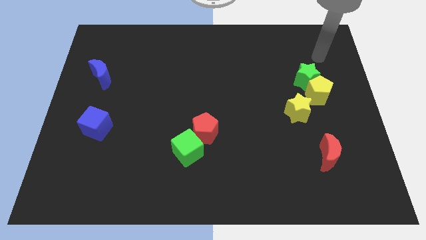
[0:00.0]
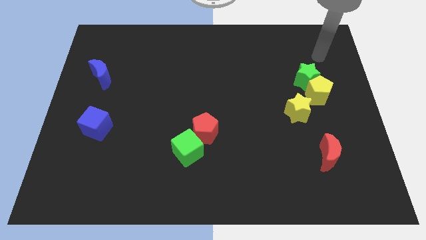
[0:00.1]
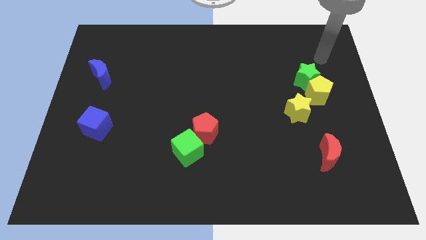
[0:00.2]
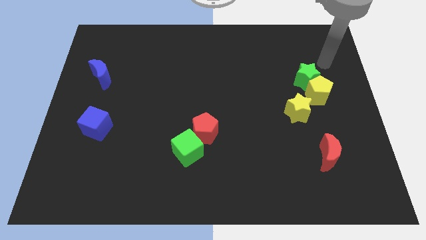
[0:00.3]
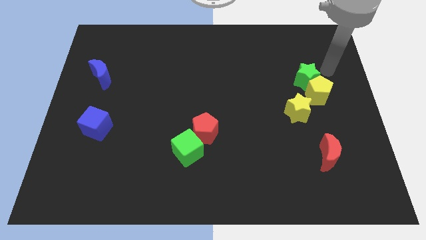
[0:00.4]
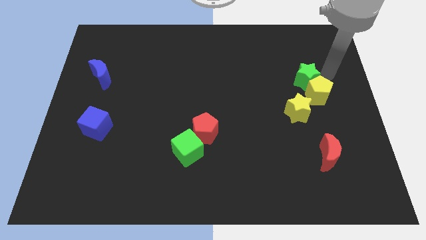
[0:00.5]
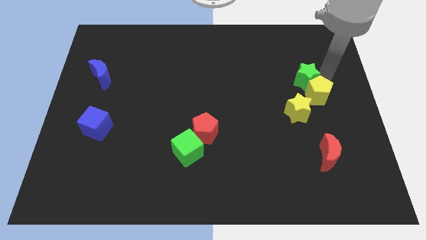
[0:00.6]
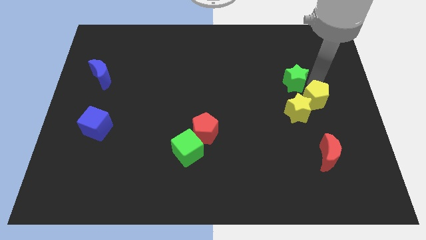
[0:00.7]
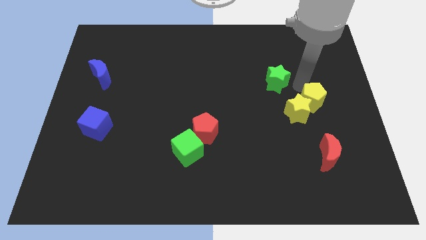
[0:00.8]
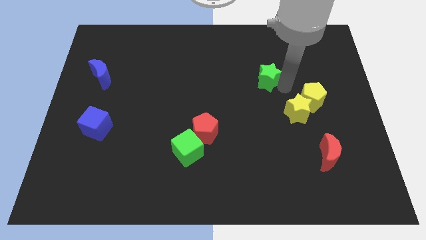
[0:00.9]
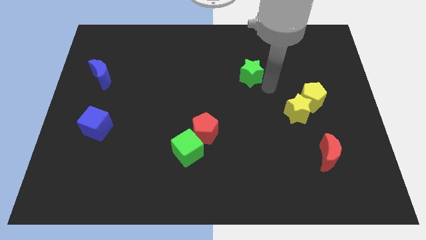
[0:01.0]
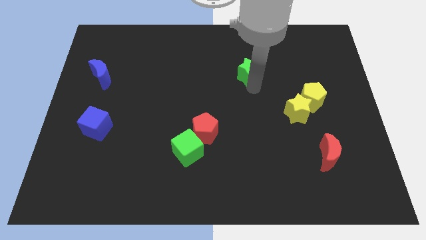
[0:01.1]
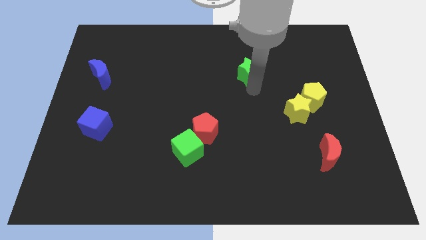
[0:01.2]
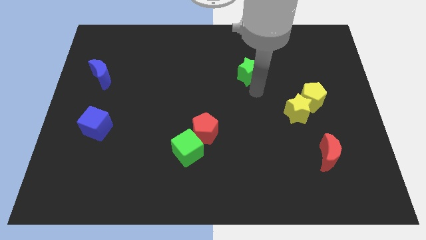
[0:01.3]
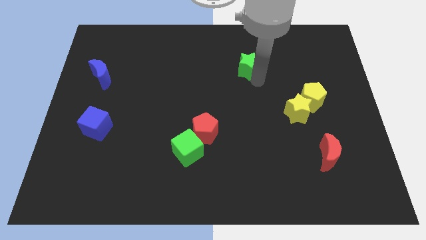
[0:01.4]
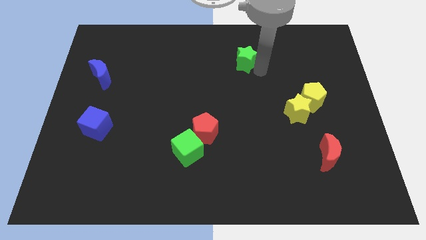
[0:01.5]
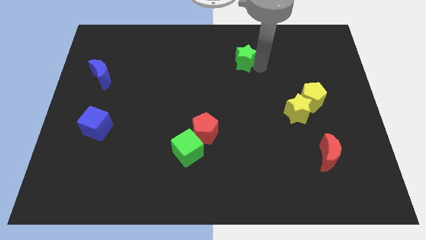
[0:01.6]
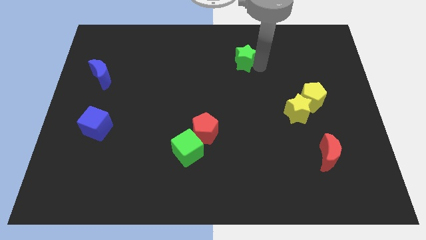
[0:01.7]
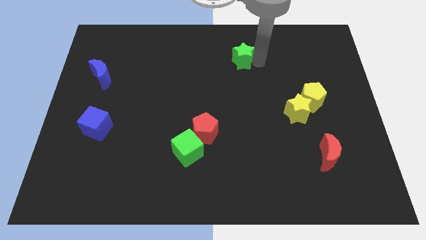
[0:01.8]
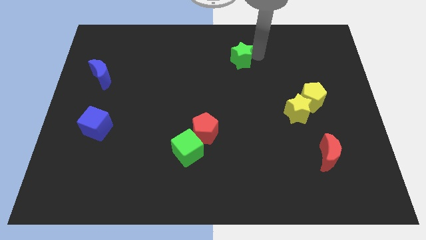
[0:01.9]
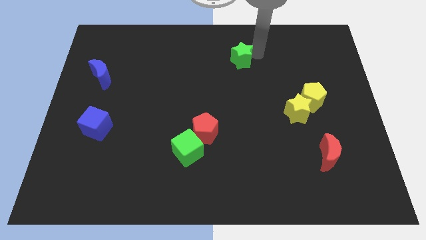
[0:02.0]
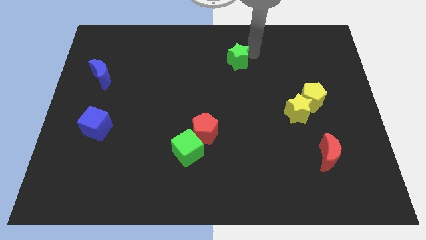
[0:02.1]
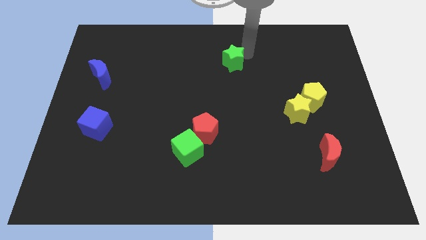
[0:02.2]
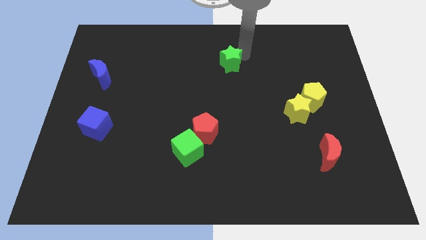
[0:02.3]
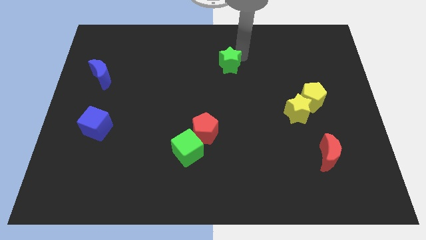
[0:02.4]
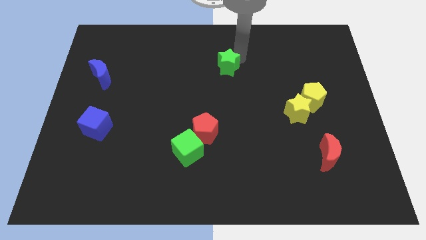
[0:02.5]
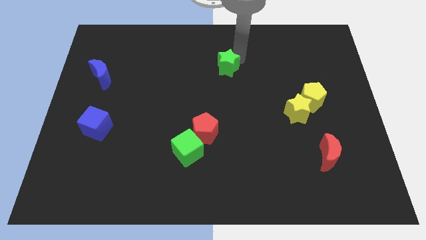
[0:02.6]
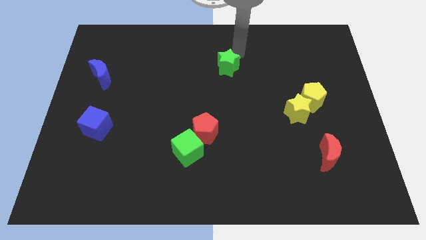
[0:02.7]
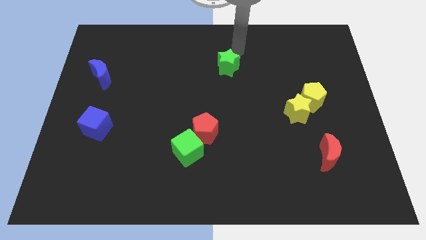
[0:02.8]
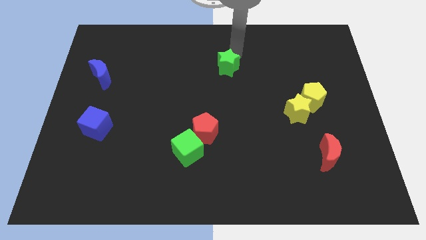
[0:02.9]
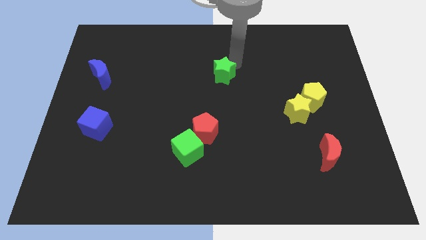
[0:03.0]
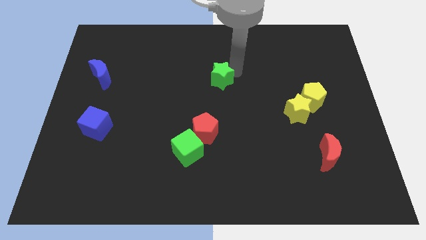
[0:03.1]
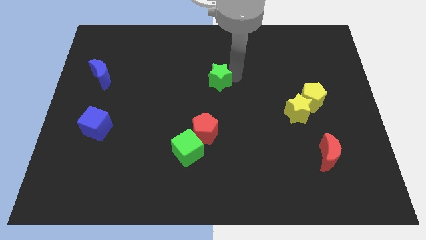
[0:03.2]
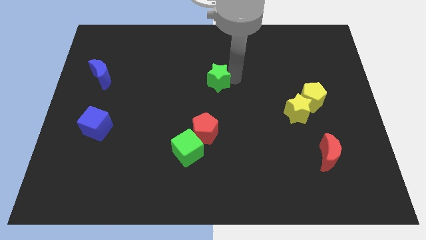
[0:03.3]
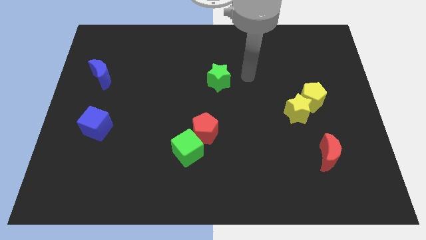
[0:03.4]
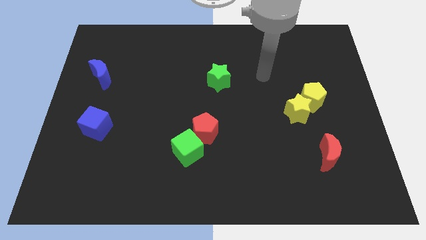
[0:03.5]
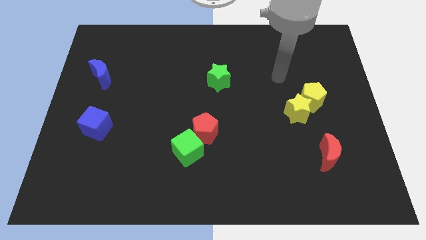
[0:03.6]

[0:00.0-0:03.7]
move the green star to the center

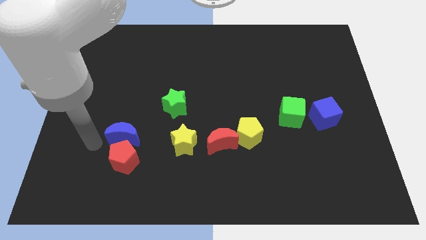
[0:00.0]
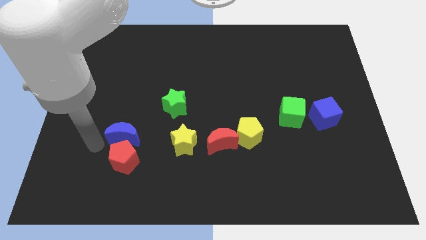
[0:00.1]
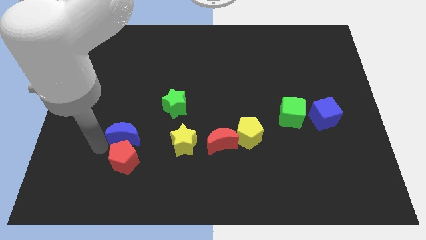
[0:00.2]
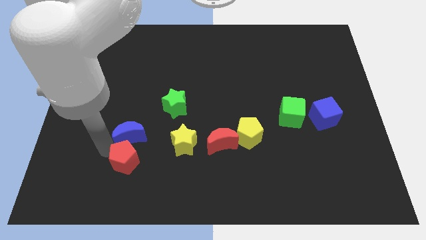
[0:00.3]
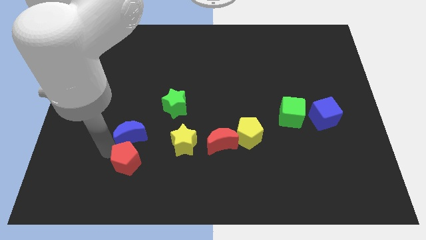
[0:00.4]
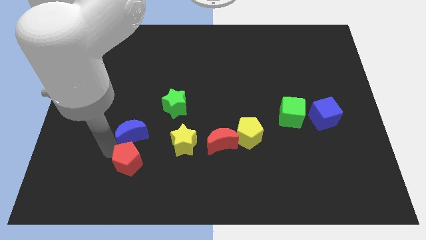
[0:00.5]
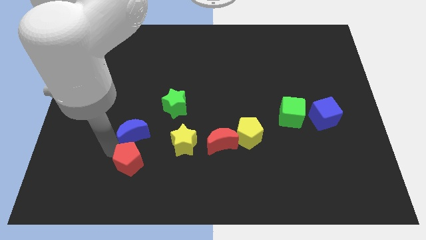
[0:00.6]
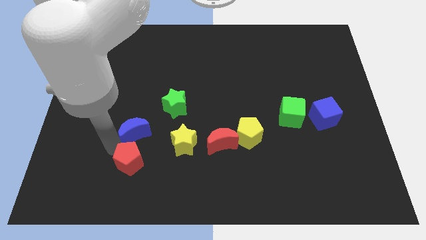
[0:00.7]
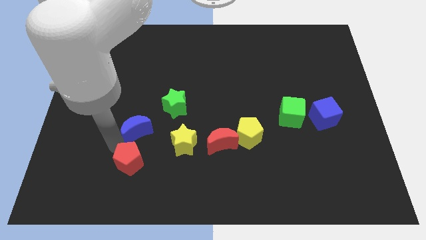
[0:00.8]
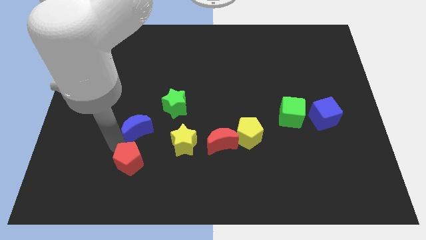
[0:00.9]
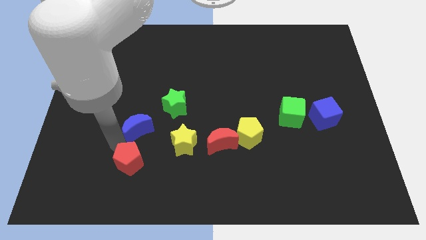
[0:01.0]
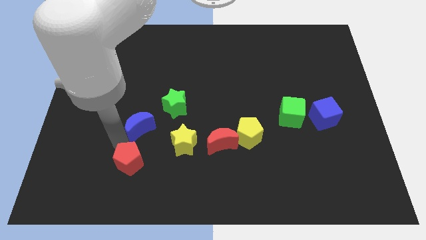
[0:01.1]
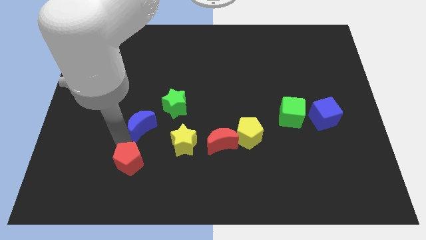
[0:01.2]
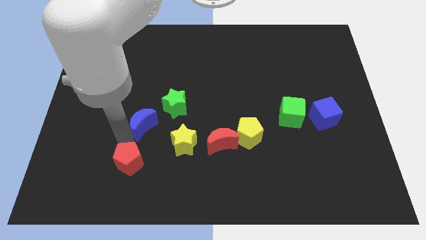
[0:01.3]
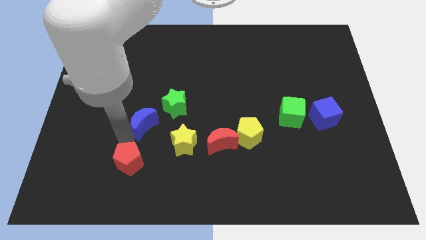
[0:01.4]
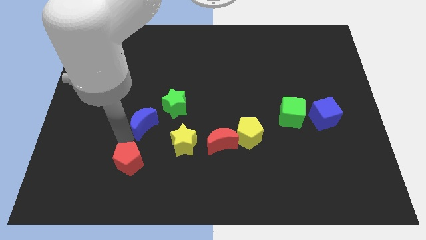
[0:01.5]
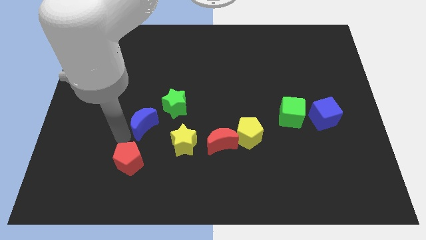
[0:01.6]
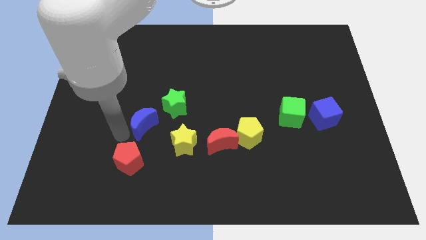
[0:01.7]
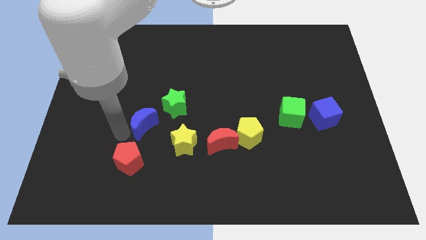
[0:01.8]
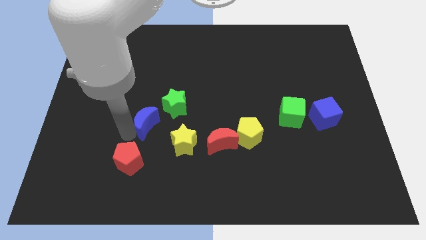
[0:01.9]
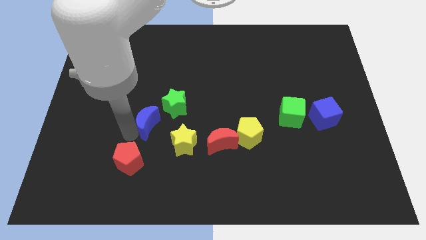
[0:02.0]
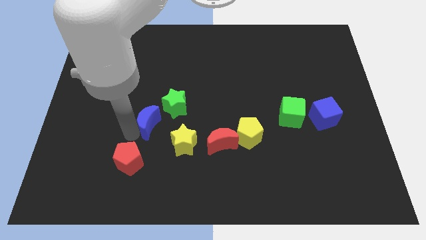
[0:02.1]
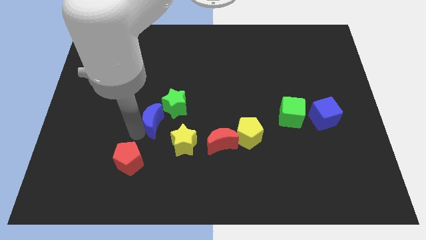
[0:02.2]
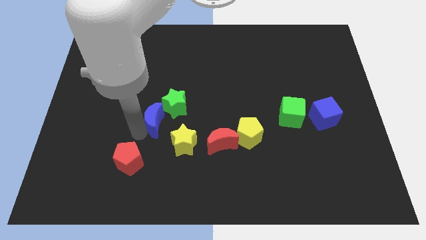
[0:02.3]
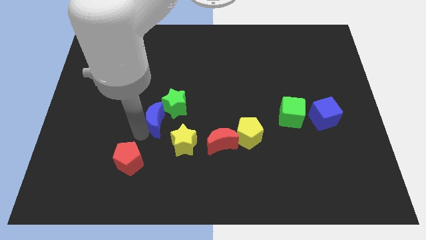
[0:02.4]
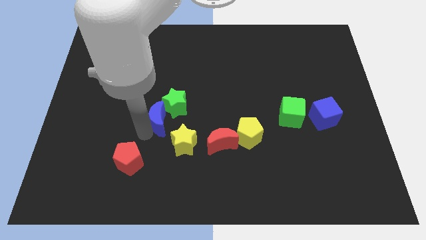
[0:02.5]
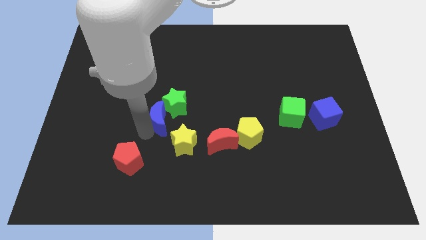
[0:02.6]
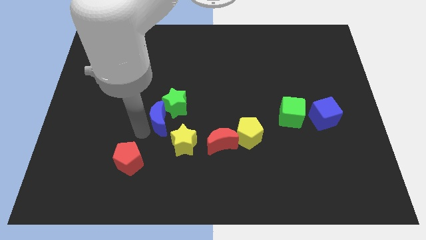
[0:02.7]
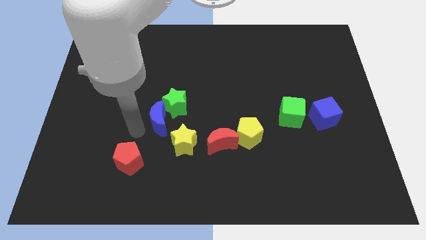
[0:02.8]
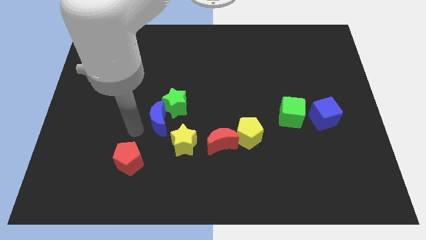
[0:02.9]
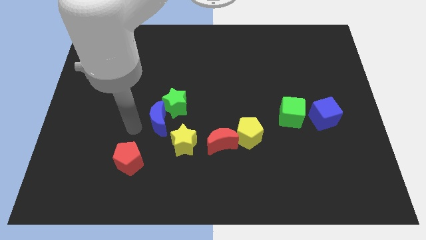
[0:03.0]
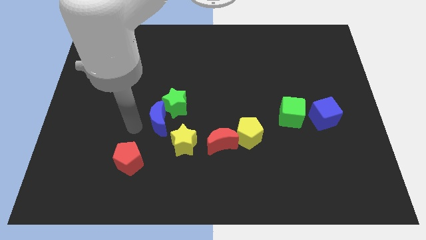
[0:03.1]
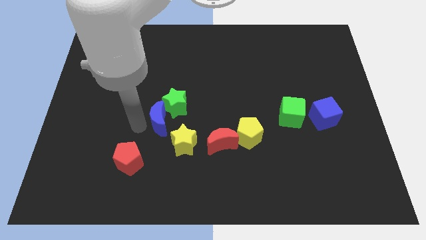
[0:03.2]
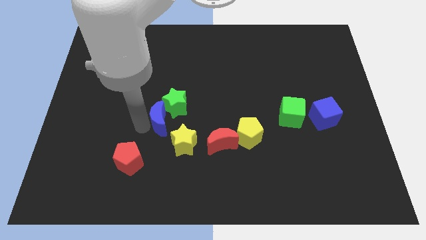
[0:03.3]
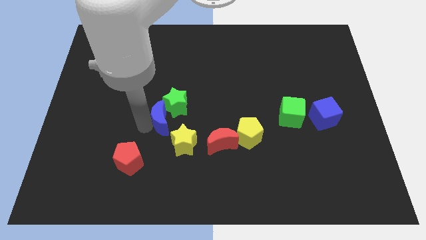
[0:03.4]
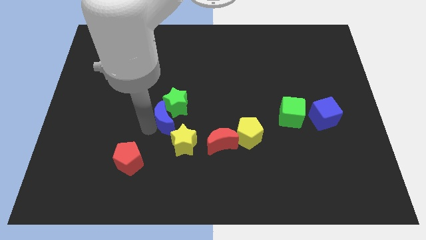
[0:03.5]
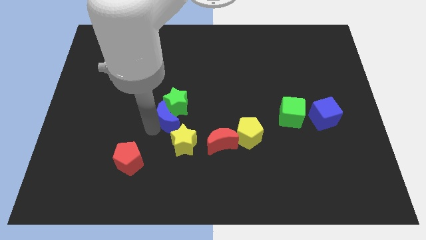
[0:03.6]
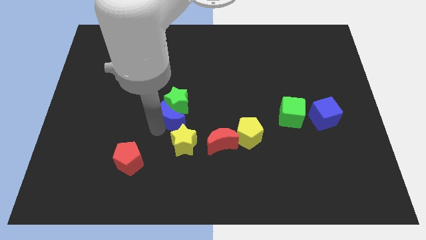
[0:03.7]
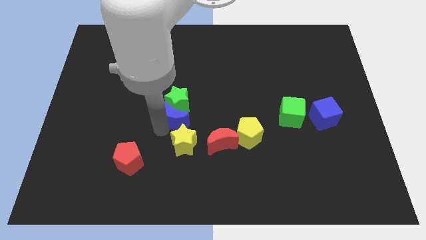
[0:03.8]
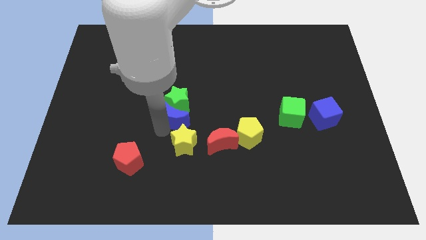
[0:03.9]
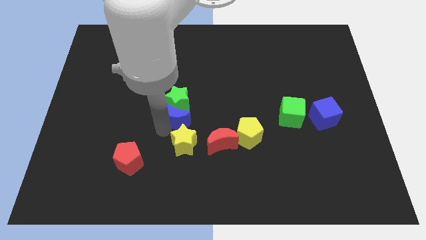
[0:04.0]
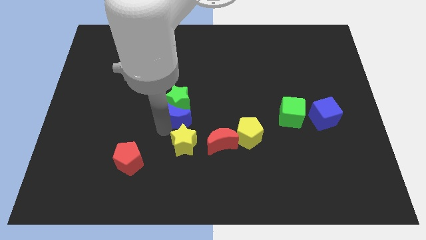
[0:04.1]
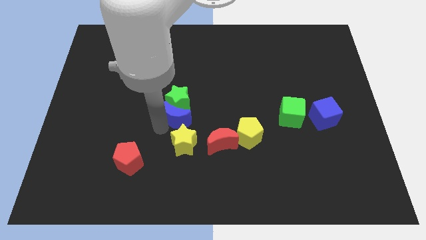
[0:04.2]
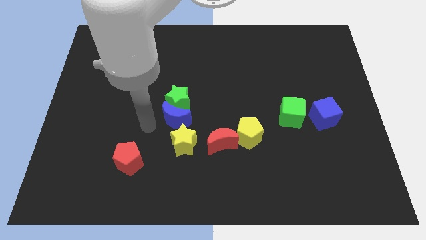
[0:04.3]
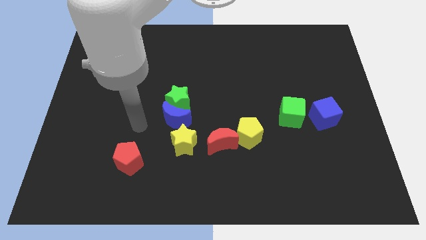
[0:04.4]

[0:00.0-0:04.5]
push the blue crescent to the top of the yellow star

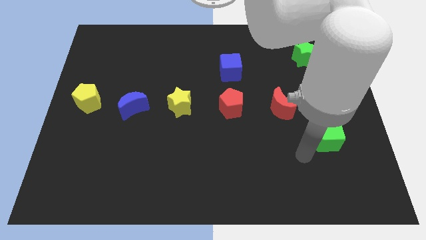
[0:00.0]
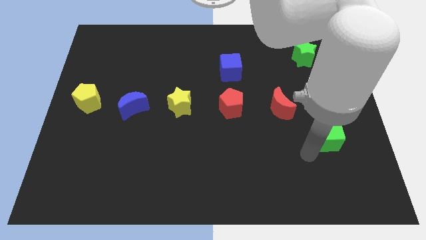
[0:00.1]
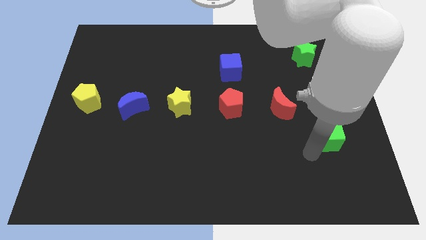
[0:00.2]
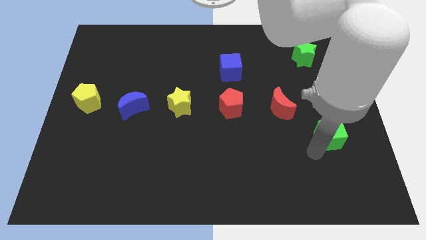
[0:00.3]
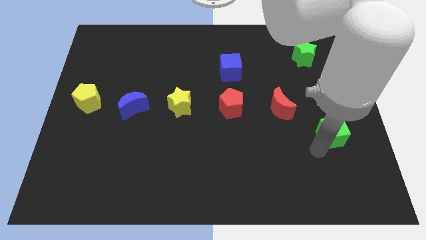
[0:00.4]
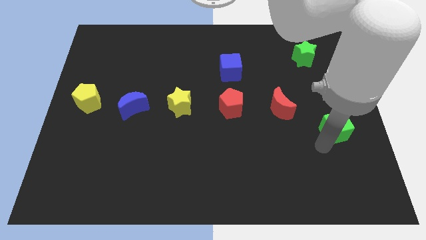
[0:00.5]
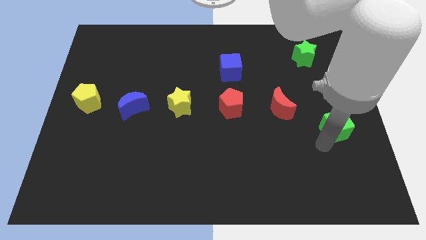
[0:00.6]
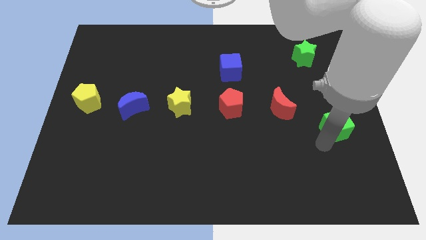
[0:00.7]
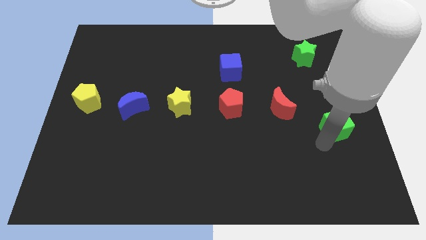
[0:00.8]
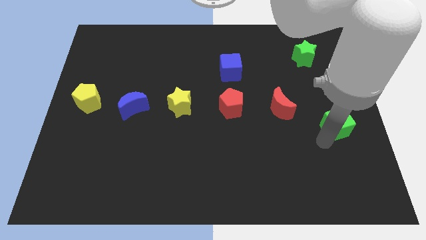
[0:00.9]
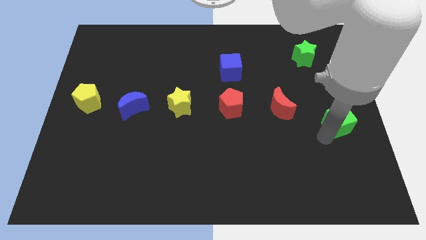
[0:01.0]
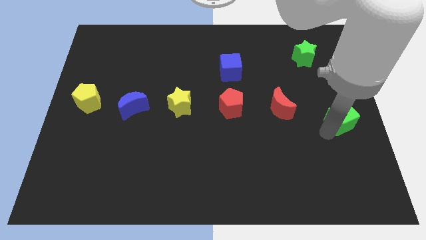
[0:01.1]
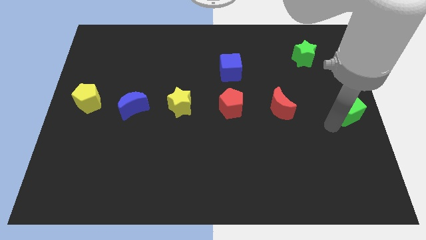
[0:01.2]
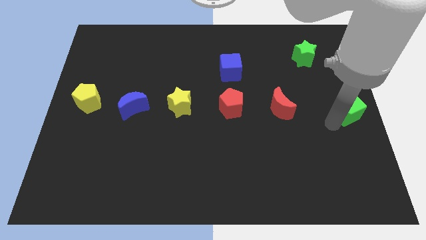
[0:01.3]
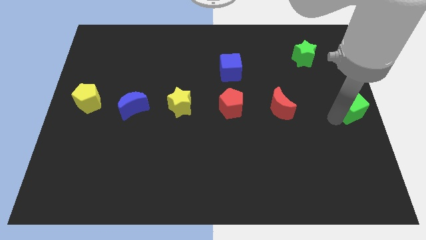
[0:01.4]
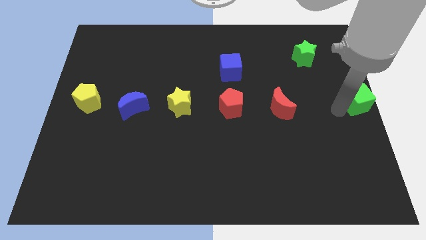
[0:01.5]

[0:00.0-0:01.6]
push the green cube horizontal right to red moon
